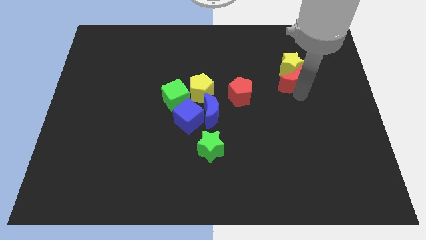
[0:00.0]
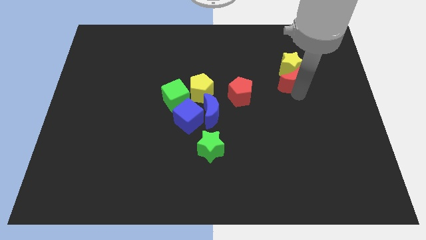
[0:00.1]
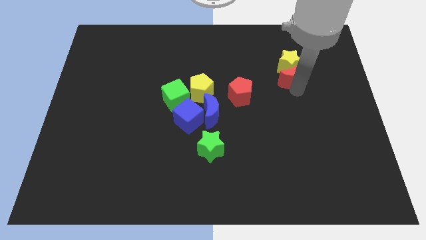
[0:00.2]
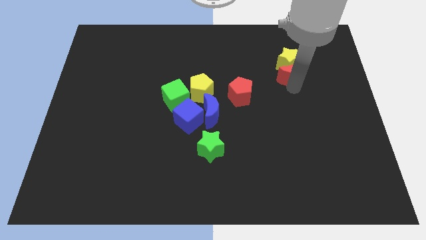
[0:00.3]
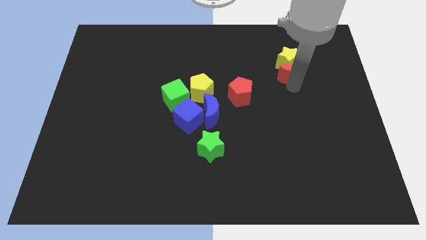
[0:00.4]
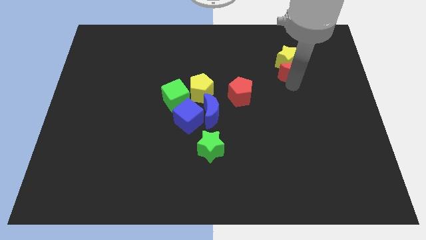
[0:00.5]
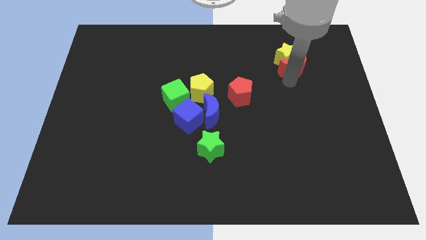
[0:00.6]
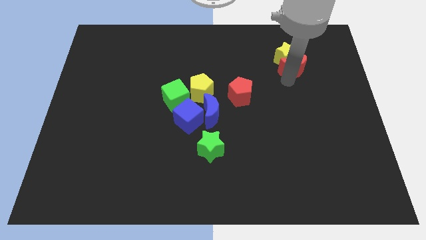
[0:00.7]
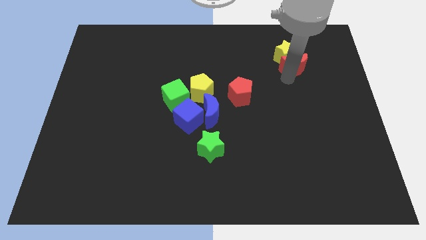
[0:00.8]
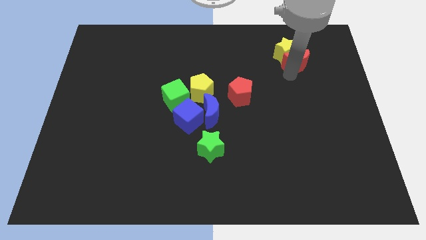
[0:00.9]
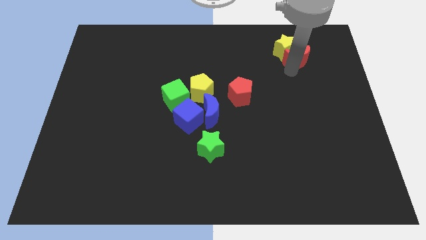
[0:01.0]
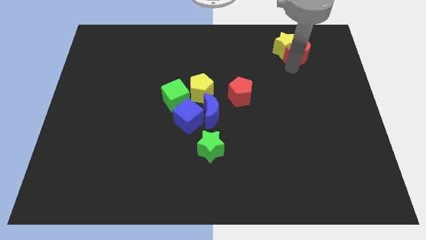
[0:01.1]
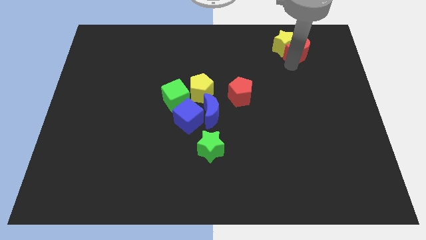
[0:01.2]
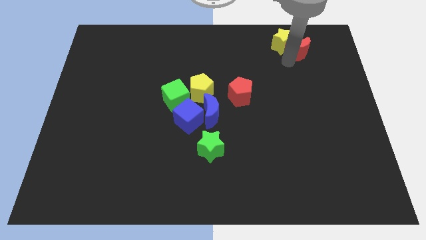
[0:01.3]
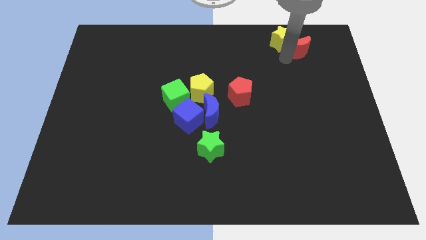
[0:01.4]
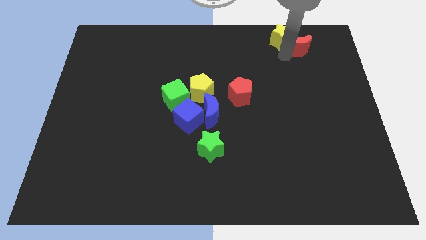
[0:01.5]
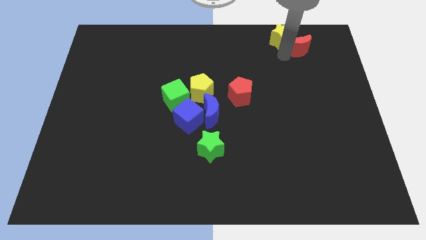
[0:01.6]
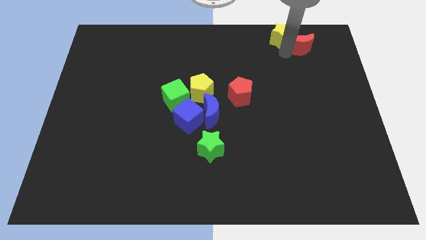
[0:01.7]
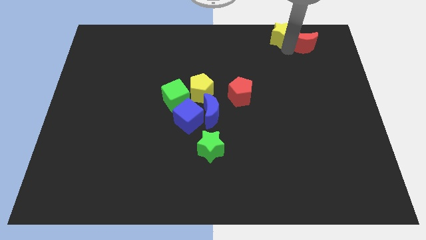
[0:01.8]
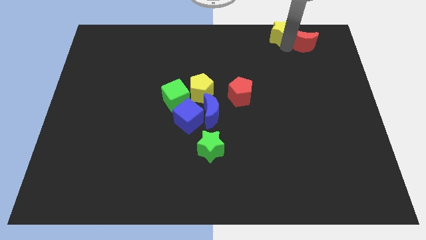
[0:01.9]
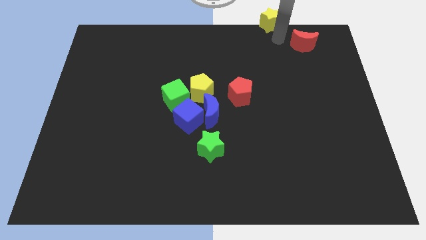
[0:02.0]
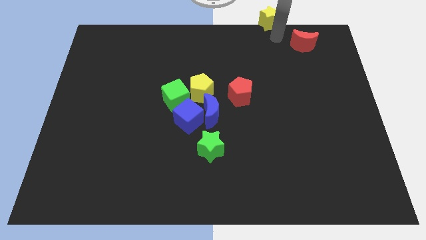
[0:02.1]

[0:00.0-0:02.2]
push the yellow star to the top with a red moon

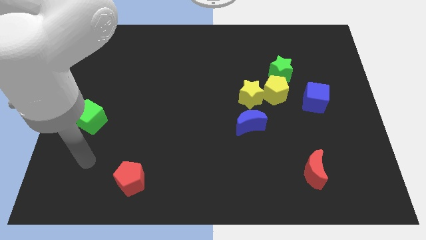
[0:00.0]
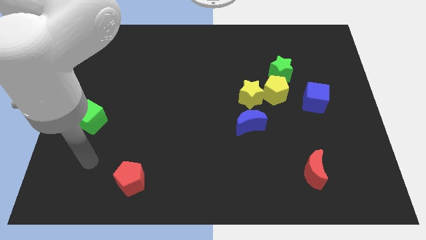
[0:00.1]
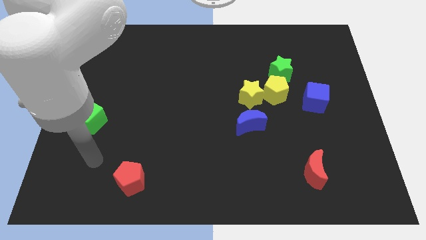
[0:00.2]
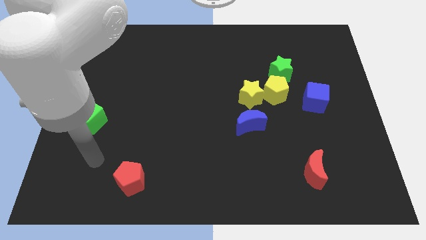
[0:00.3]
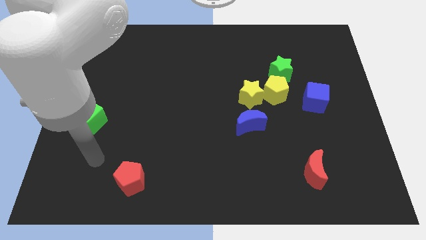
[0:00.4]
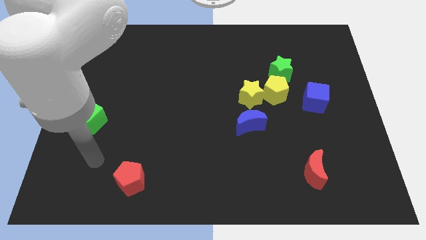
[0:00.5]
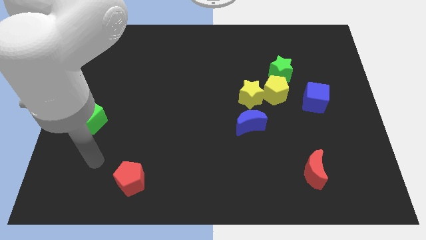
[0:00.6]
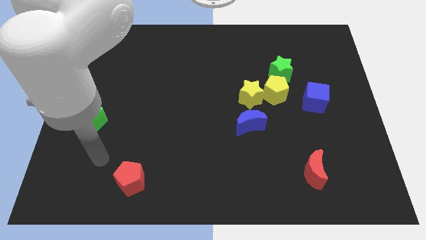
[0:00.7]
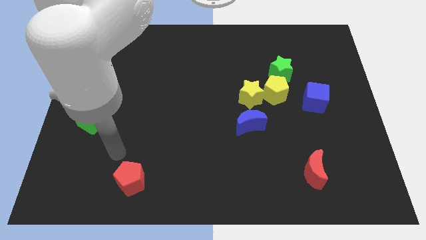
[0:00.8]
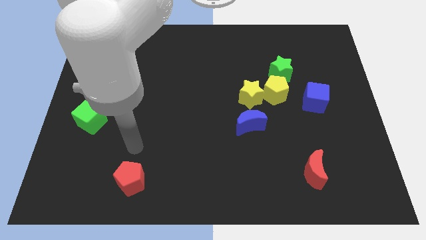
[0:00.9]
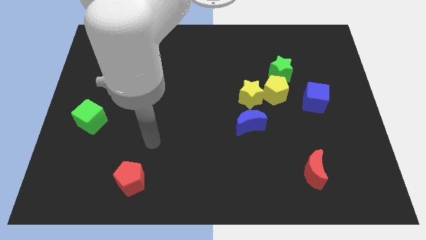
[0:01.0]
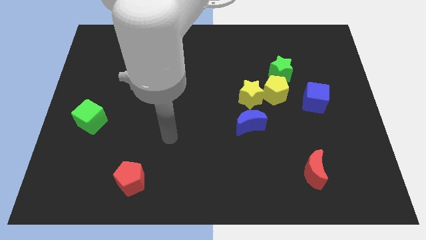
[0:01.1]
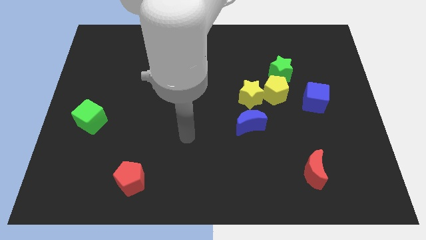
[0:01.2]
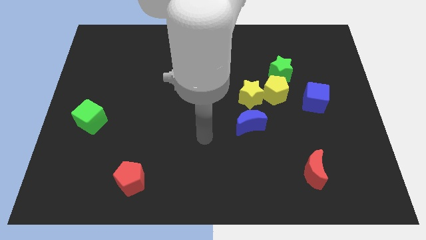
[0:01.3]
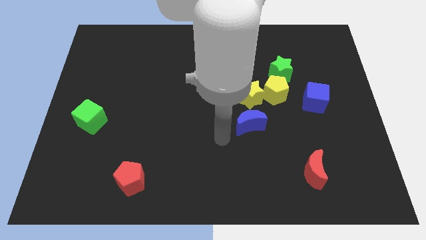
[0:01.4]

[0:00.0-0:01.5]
point the arm to the left of the blue moon

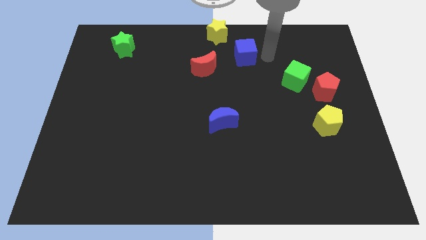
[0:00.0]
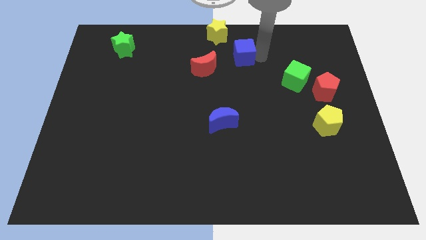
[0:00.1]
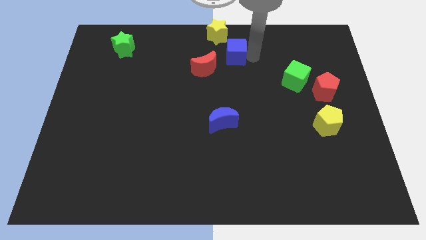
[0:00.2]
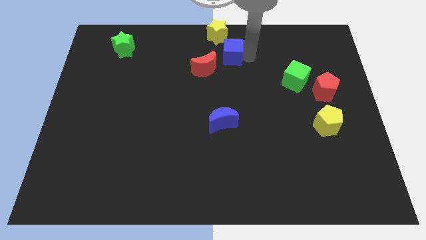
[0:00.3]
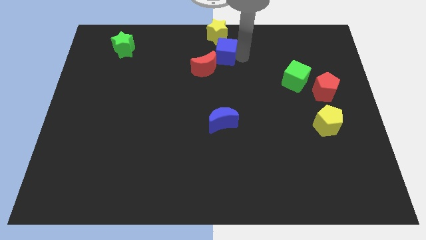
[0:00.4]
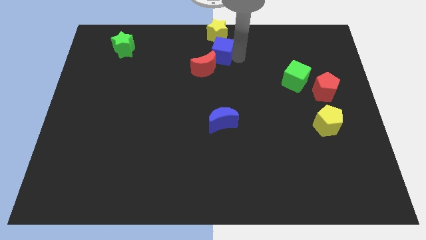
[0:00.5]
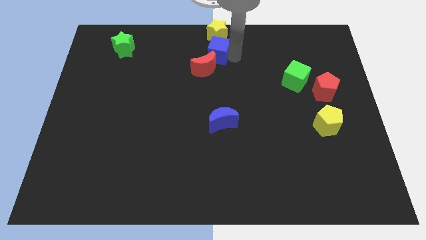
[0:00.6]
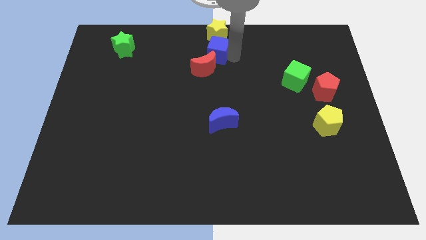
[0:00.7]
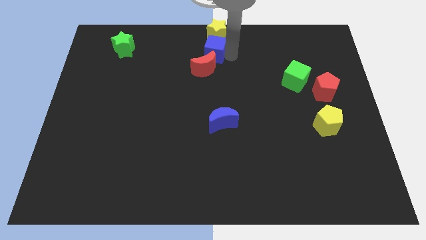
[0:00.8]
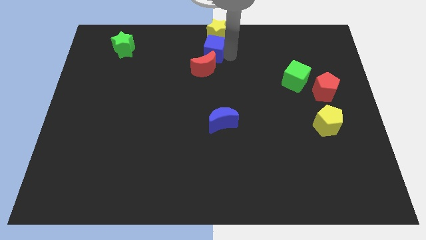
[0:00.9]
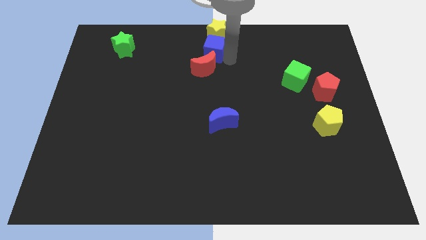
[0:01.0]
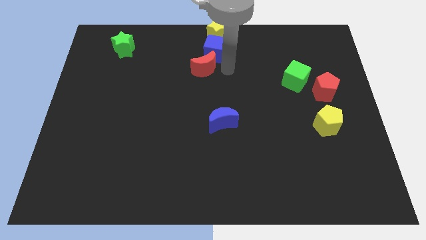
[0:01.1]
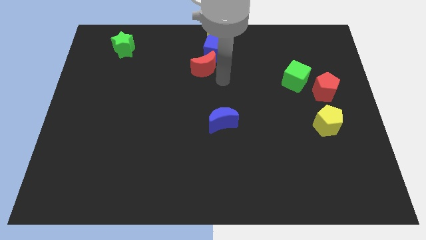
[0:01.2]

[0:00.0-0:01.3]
place the blue cube between the yellow star and red moon

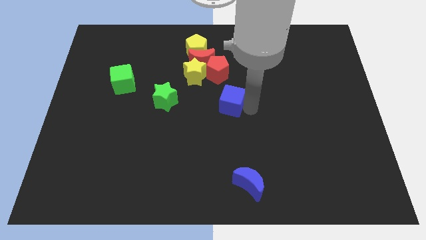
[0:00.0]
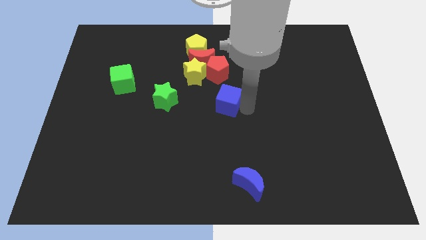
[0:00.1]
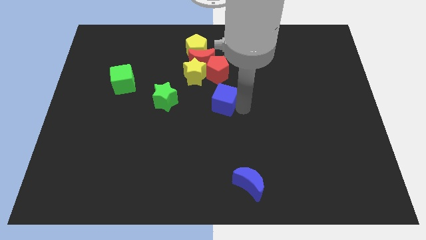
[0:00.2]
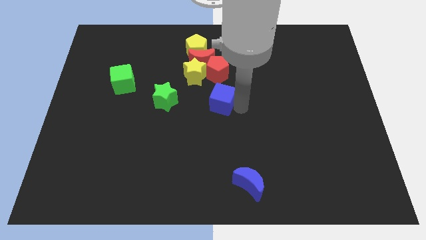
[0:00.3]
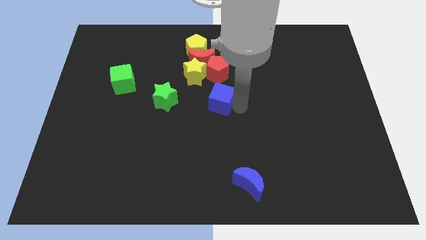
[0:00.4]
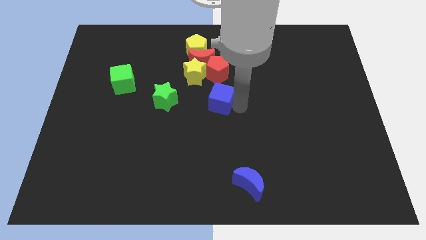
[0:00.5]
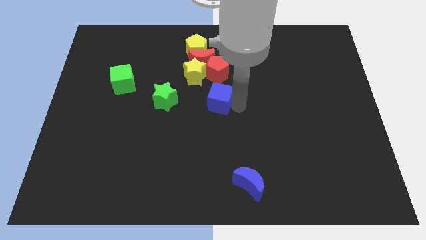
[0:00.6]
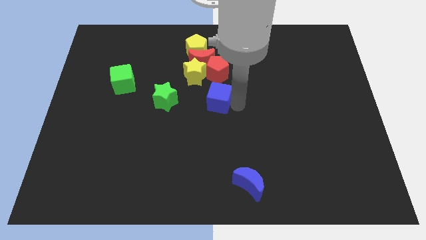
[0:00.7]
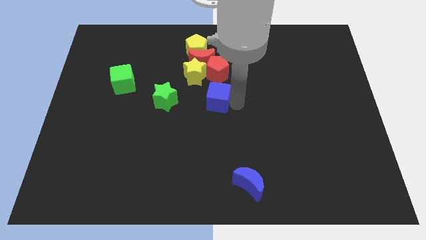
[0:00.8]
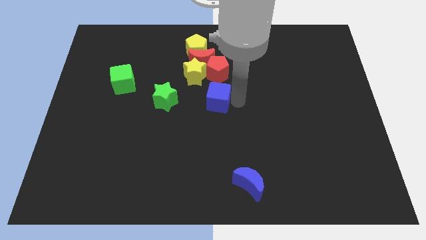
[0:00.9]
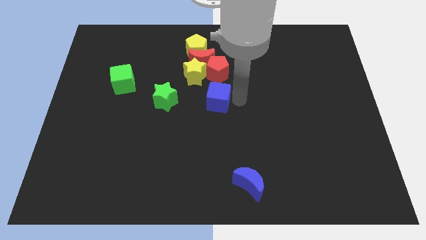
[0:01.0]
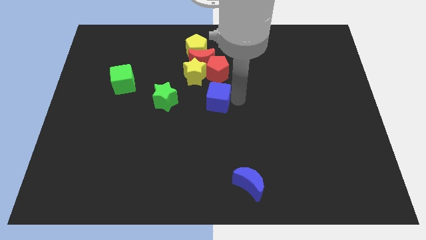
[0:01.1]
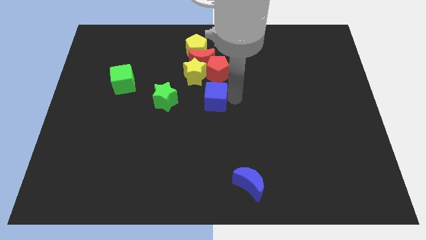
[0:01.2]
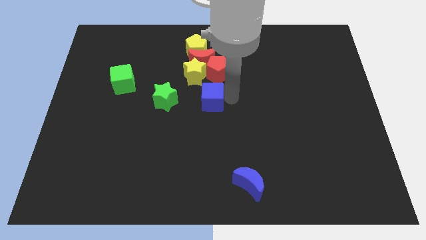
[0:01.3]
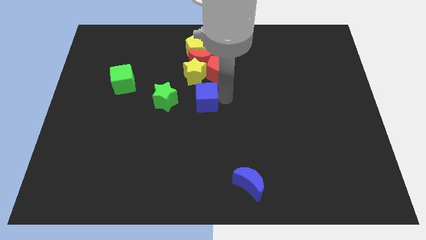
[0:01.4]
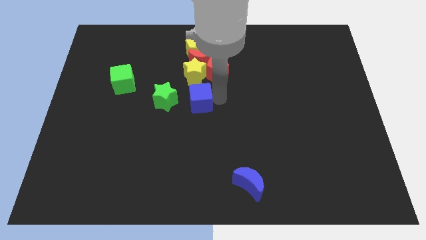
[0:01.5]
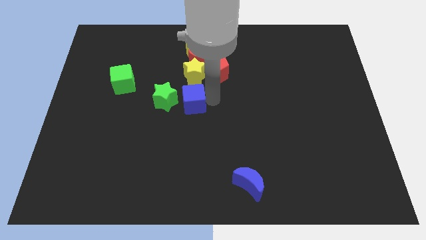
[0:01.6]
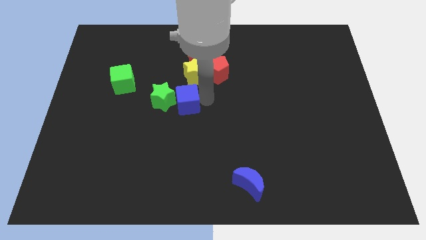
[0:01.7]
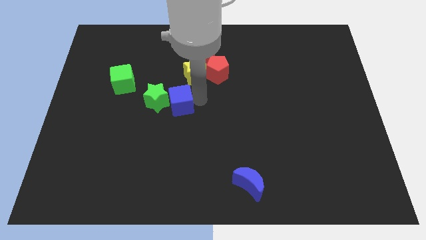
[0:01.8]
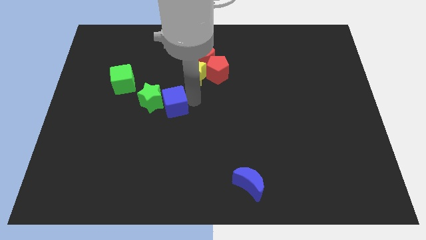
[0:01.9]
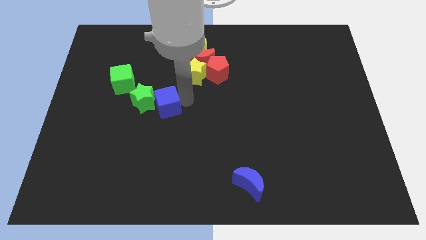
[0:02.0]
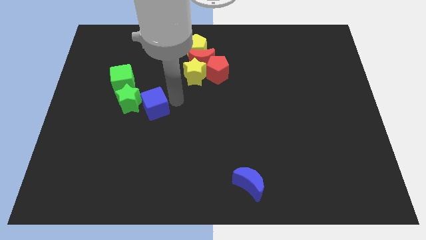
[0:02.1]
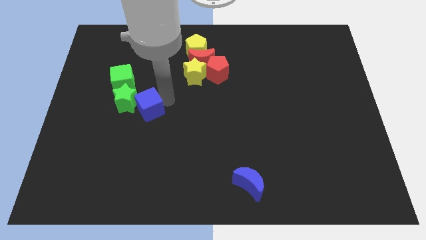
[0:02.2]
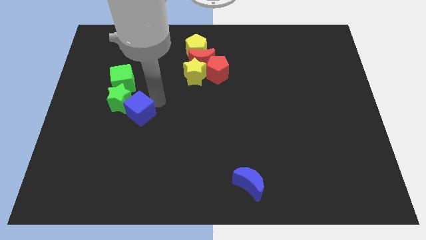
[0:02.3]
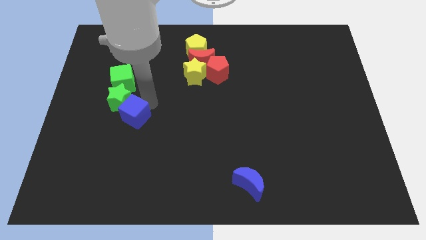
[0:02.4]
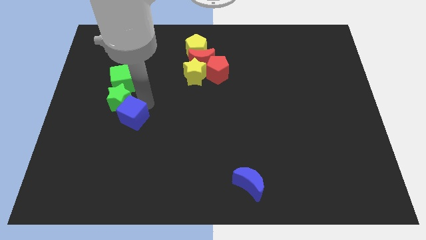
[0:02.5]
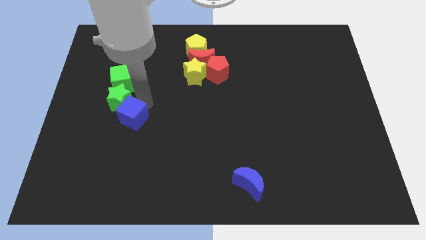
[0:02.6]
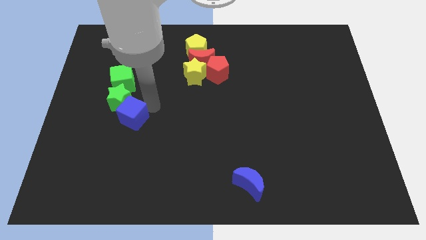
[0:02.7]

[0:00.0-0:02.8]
push the green star using the blue cube

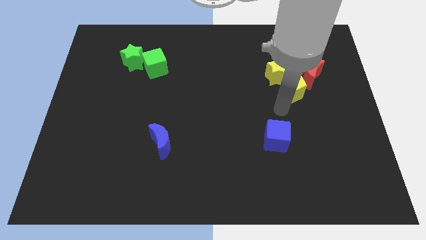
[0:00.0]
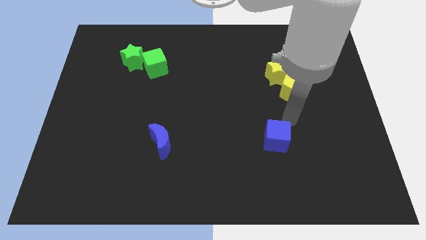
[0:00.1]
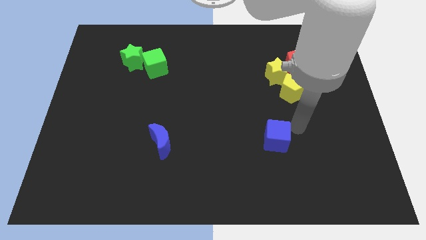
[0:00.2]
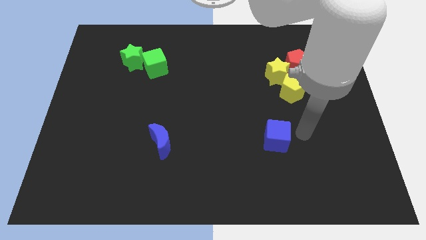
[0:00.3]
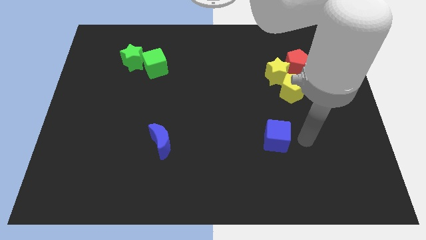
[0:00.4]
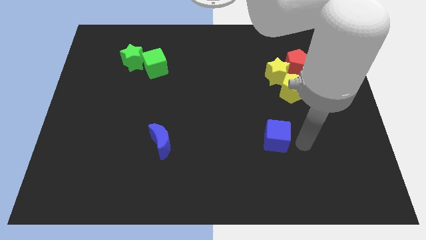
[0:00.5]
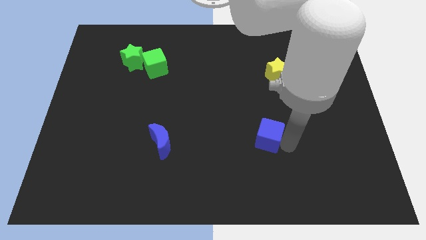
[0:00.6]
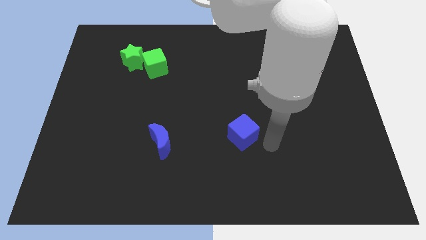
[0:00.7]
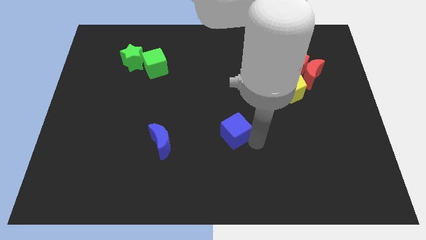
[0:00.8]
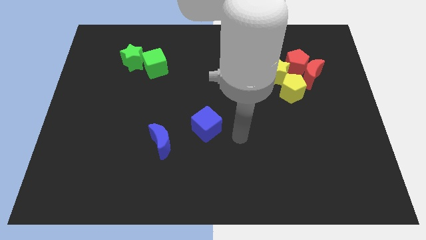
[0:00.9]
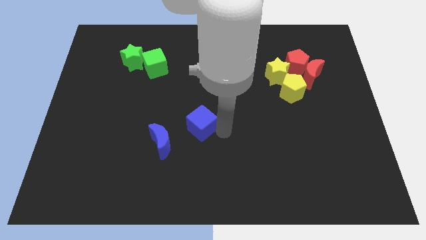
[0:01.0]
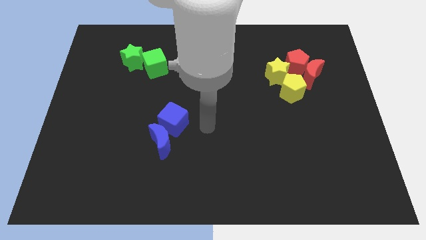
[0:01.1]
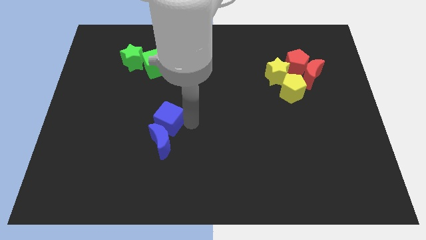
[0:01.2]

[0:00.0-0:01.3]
move the blue cube to the top side of the blue crescent
